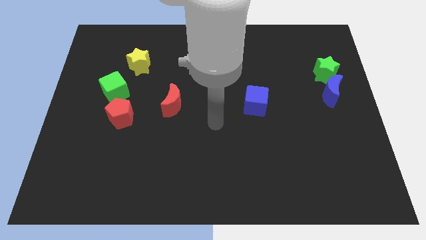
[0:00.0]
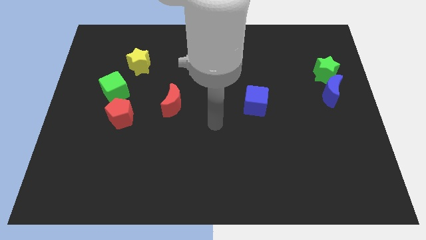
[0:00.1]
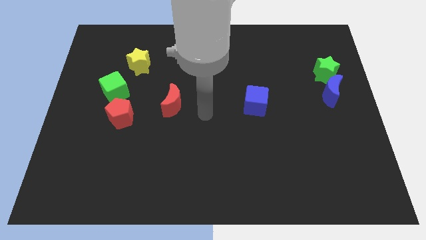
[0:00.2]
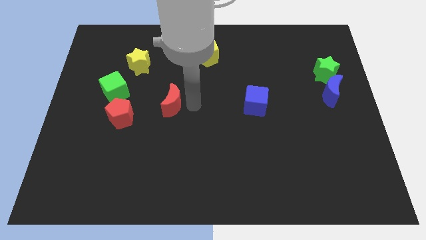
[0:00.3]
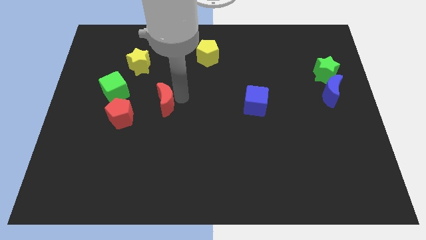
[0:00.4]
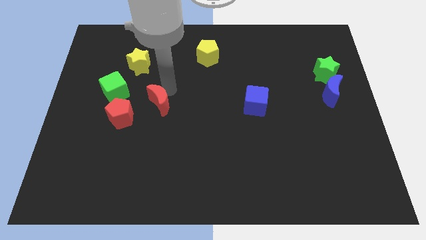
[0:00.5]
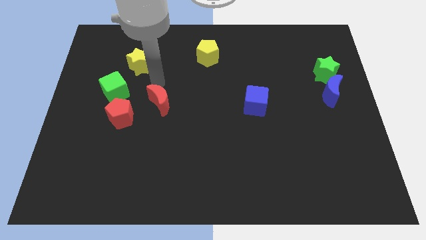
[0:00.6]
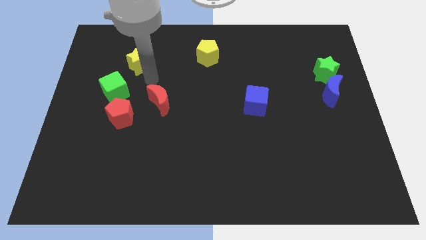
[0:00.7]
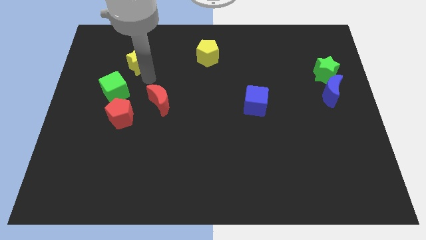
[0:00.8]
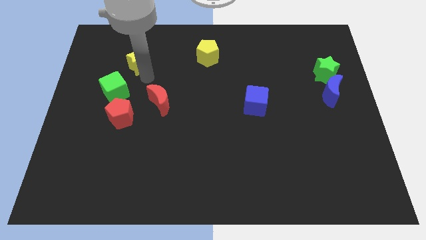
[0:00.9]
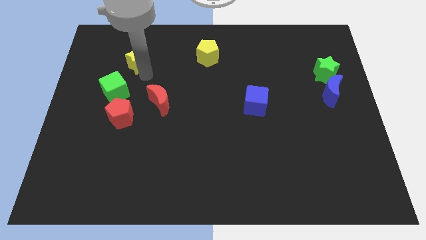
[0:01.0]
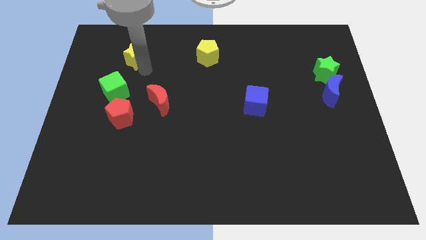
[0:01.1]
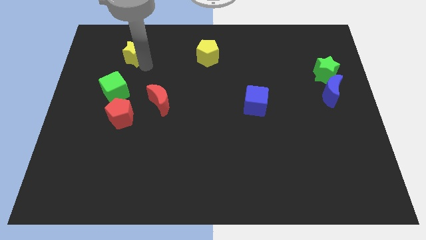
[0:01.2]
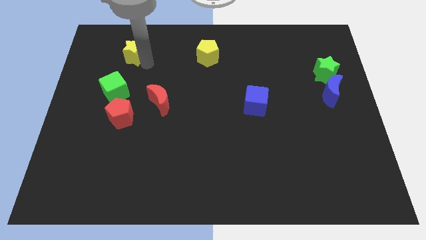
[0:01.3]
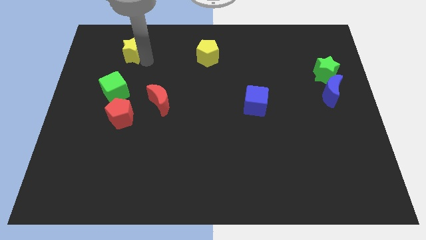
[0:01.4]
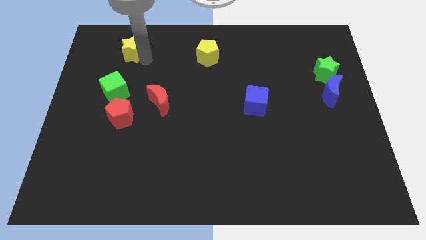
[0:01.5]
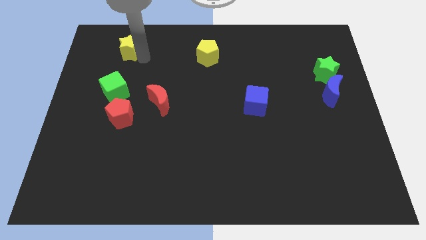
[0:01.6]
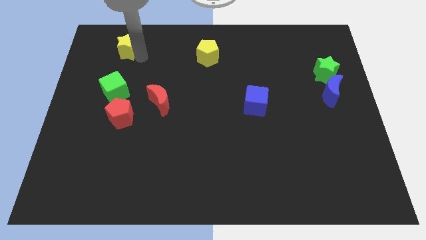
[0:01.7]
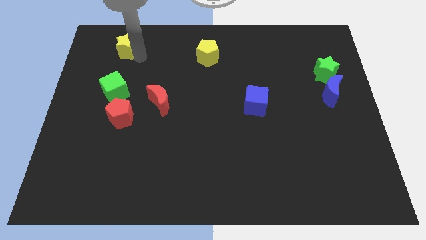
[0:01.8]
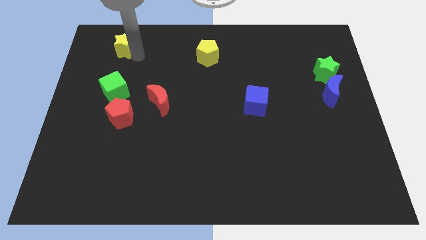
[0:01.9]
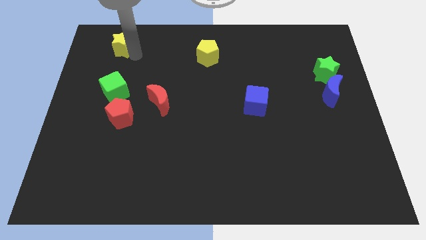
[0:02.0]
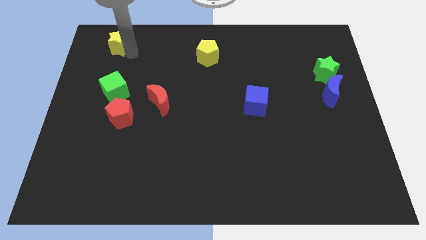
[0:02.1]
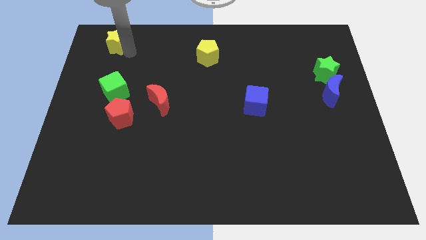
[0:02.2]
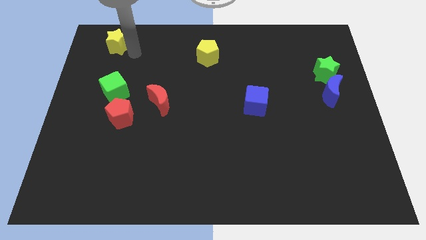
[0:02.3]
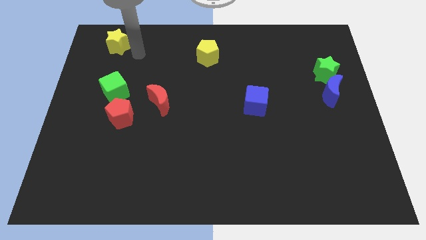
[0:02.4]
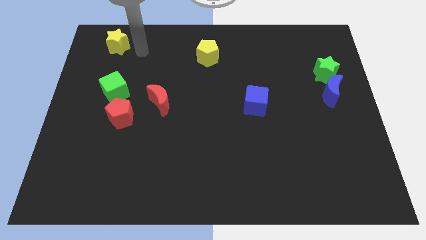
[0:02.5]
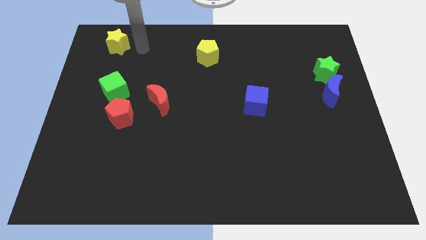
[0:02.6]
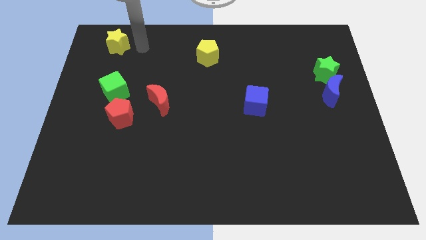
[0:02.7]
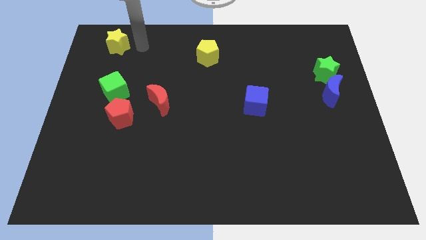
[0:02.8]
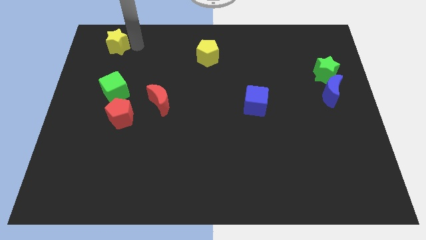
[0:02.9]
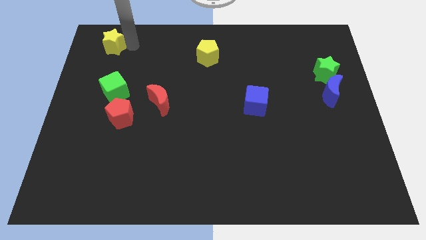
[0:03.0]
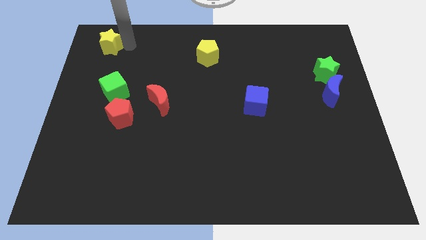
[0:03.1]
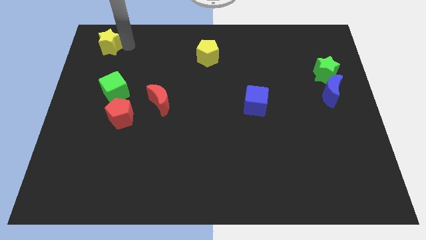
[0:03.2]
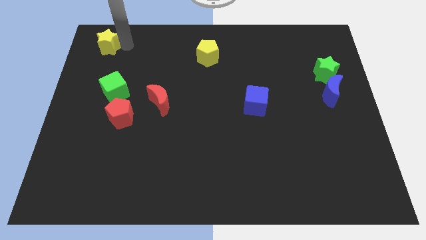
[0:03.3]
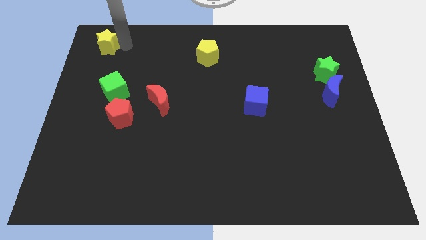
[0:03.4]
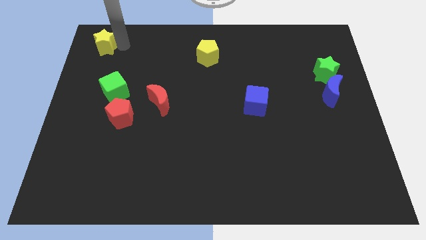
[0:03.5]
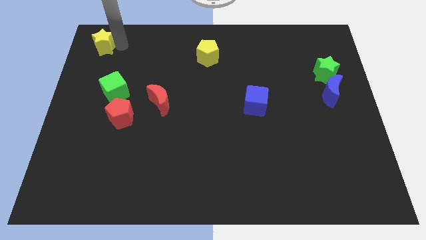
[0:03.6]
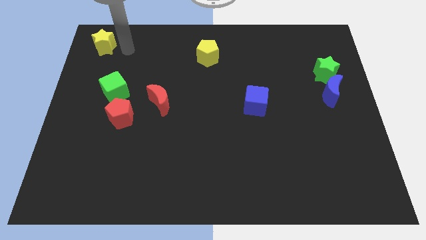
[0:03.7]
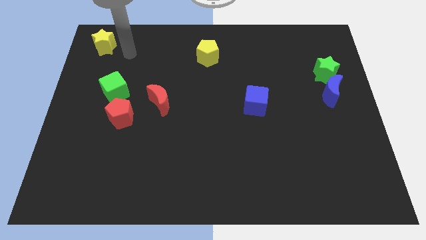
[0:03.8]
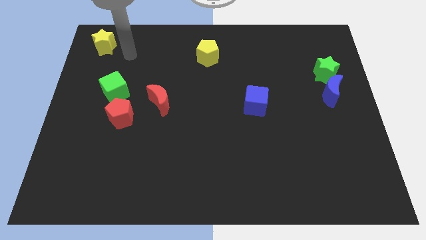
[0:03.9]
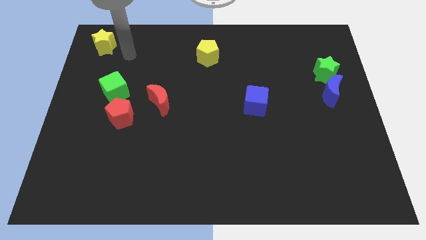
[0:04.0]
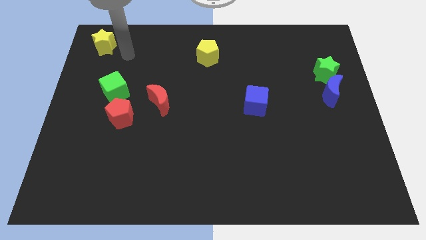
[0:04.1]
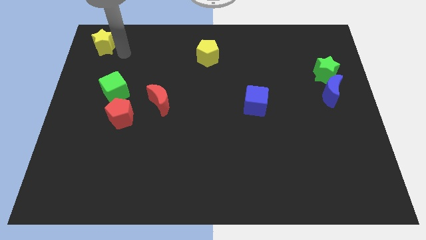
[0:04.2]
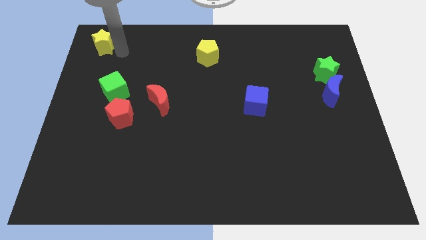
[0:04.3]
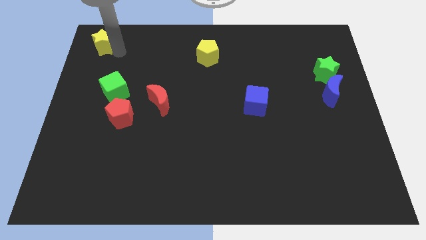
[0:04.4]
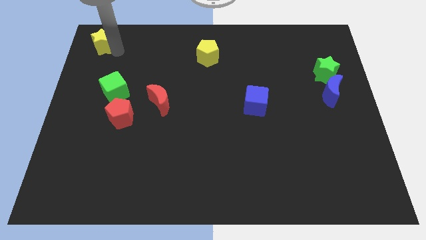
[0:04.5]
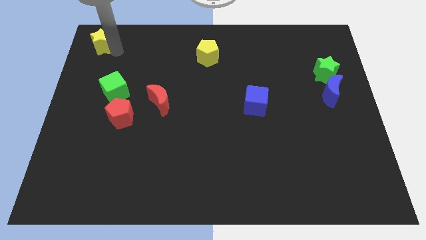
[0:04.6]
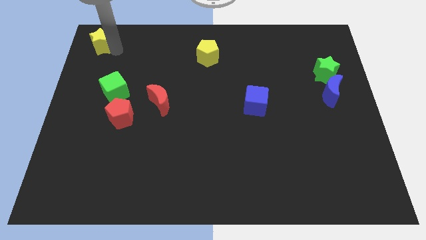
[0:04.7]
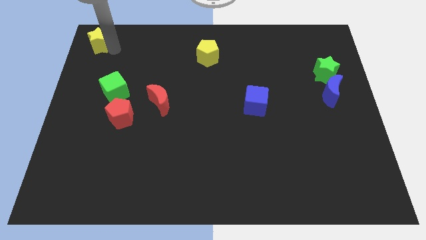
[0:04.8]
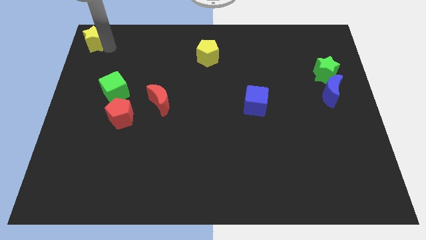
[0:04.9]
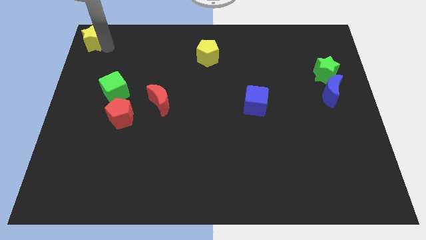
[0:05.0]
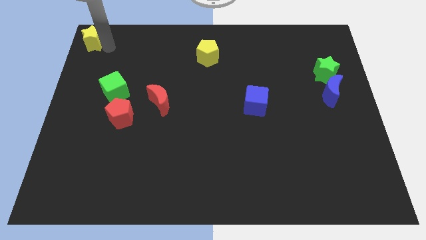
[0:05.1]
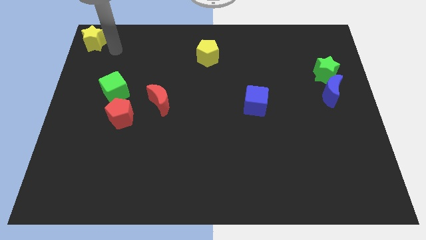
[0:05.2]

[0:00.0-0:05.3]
push yellow star towards top left side of the board

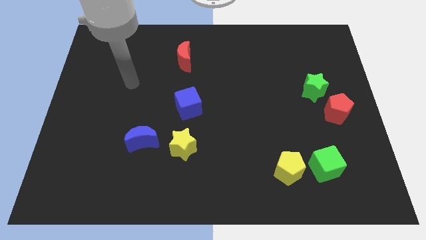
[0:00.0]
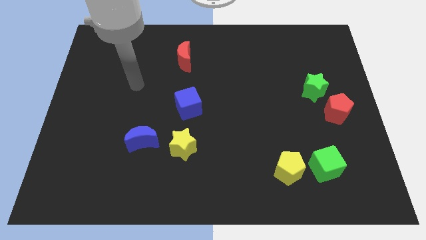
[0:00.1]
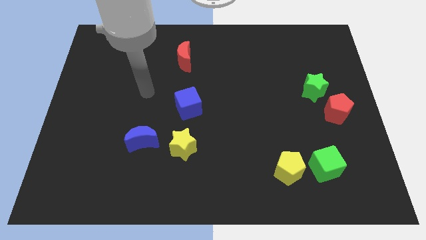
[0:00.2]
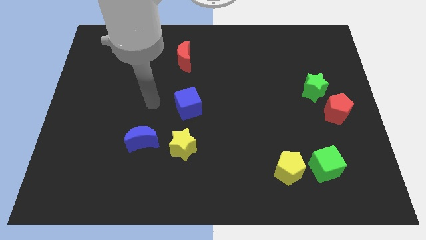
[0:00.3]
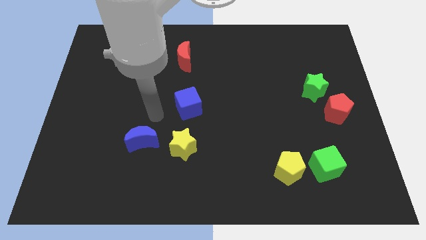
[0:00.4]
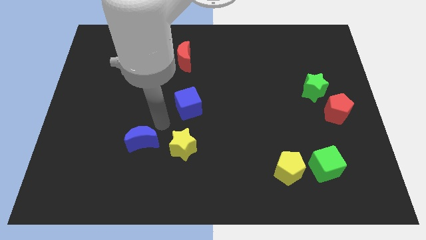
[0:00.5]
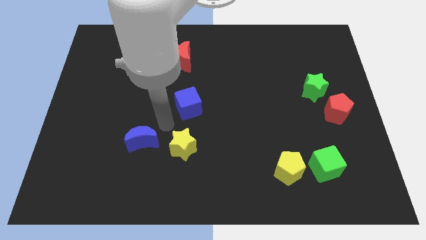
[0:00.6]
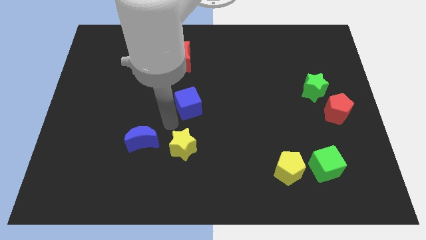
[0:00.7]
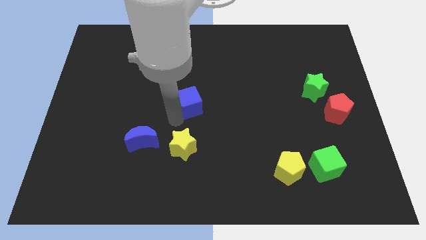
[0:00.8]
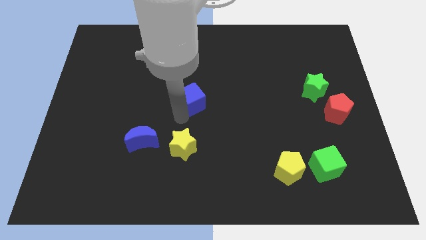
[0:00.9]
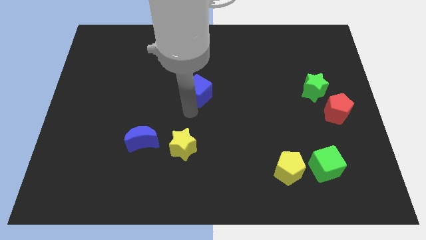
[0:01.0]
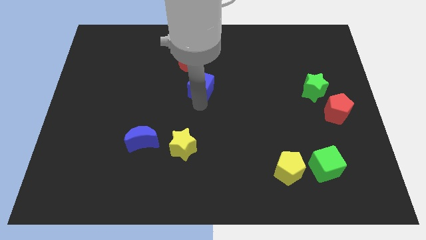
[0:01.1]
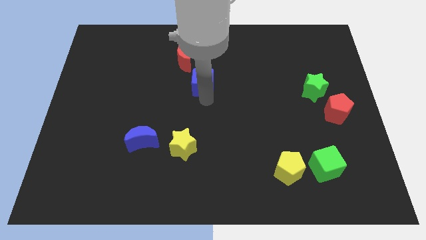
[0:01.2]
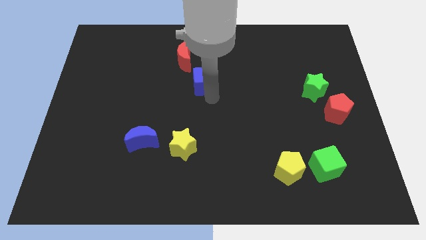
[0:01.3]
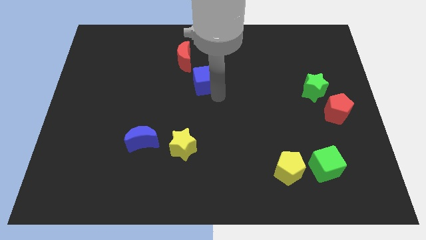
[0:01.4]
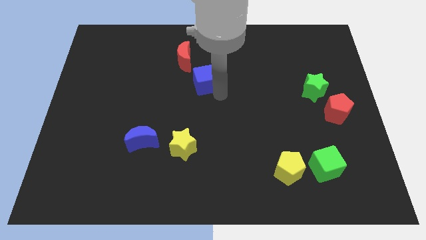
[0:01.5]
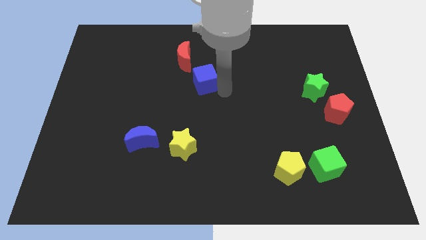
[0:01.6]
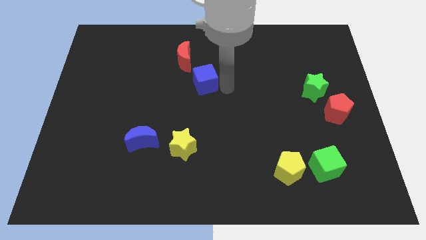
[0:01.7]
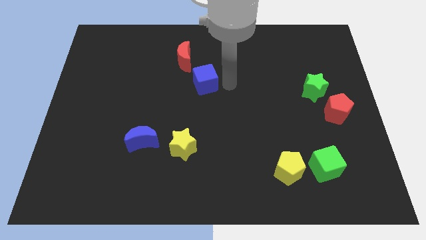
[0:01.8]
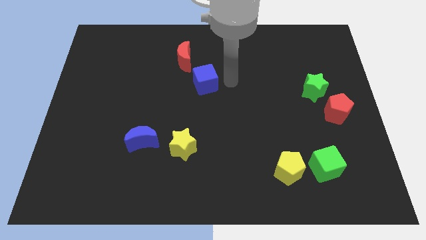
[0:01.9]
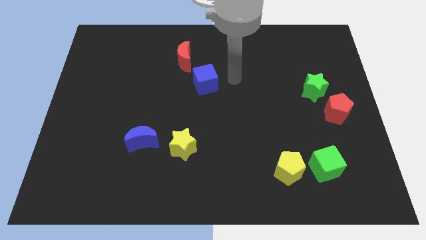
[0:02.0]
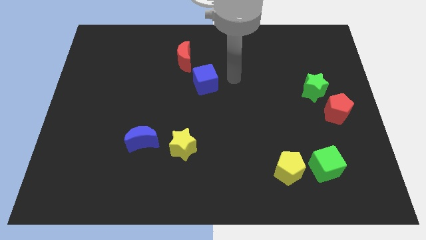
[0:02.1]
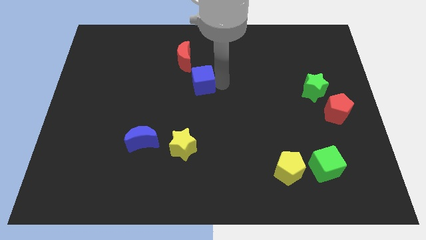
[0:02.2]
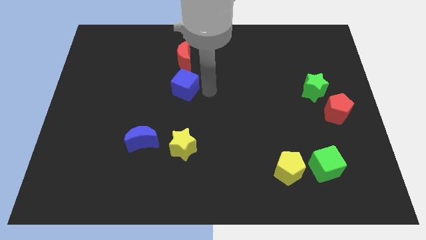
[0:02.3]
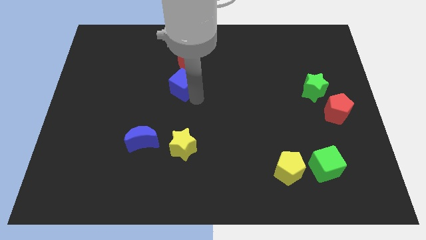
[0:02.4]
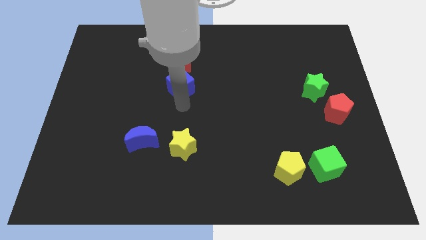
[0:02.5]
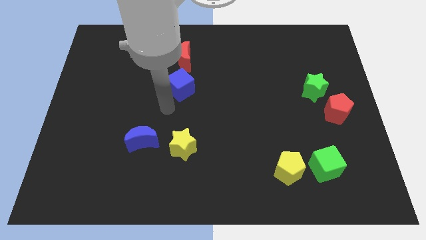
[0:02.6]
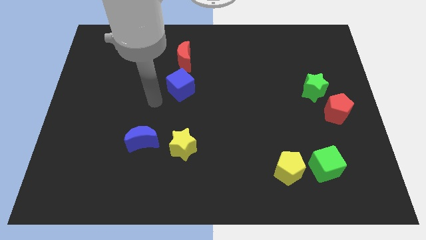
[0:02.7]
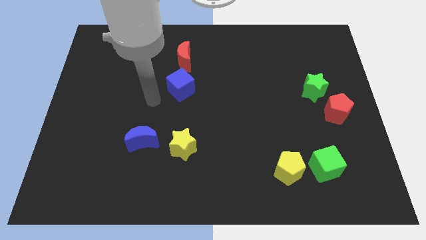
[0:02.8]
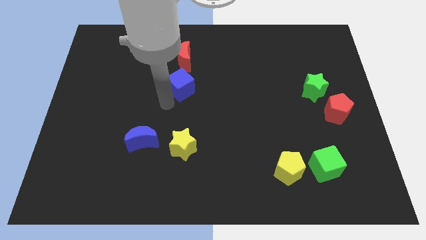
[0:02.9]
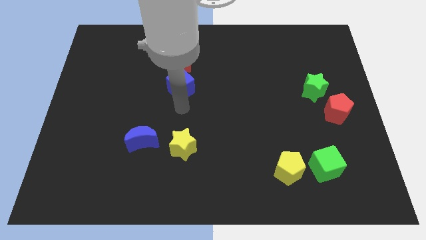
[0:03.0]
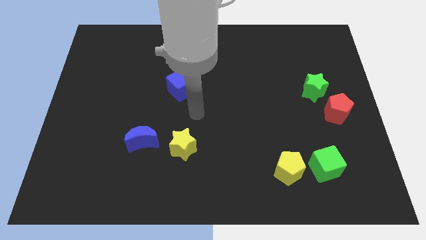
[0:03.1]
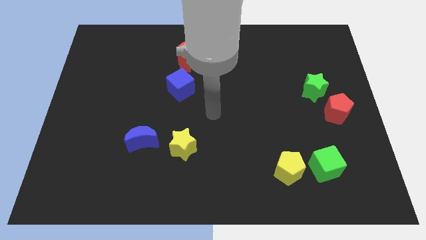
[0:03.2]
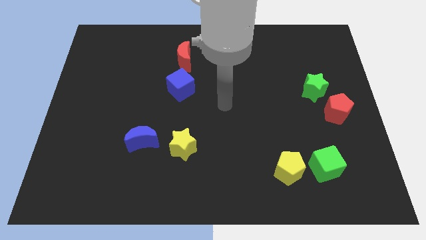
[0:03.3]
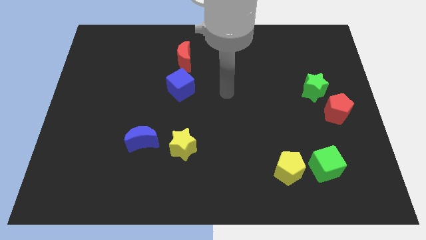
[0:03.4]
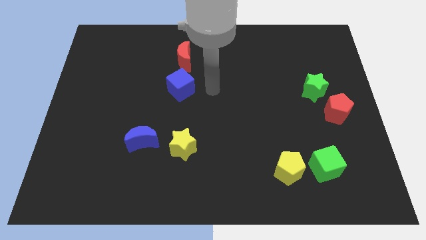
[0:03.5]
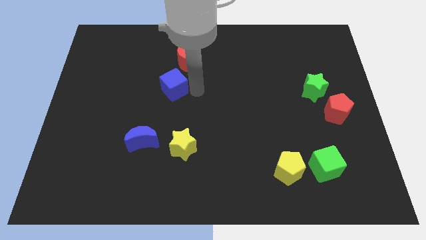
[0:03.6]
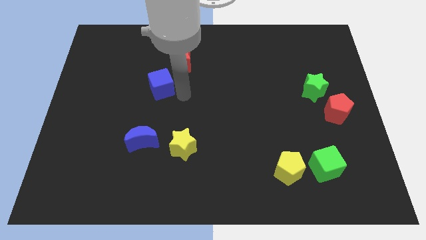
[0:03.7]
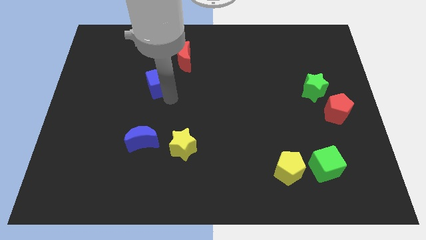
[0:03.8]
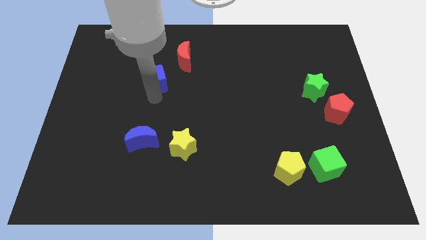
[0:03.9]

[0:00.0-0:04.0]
move blue slightly upwards diagonal to red moon
